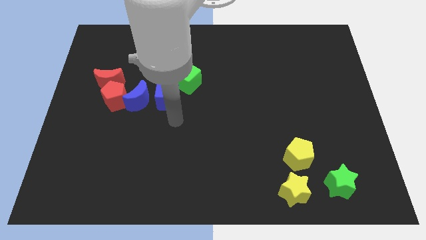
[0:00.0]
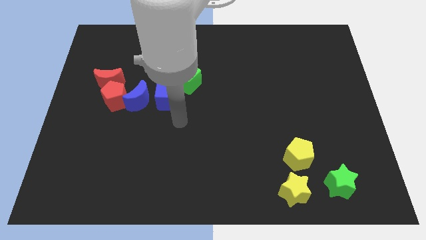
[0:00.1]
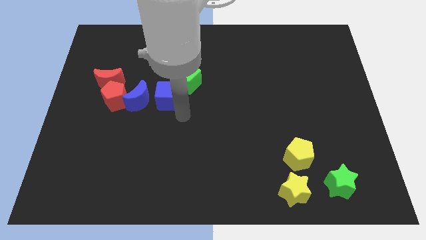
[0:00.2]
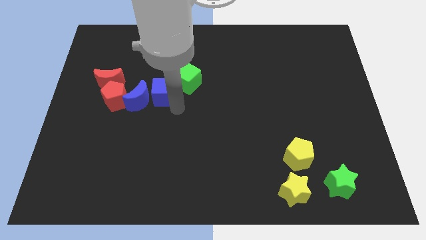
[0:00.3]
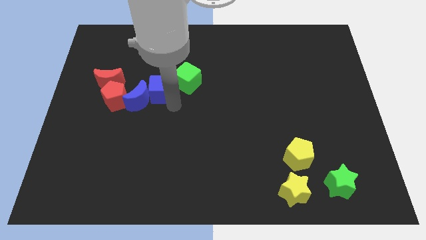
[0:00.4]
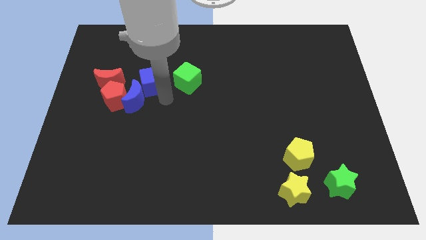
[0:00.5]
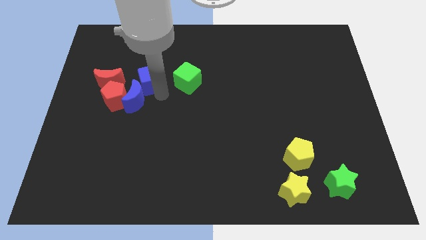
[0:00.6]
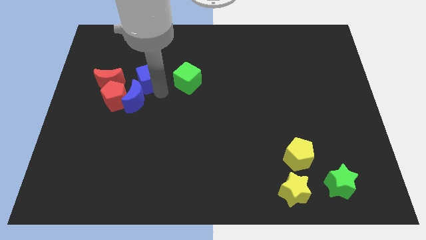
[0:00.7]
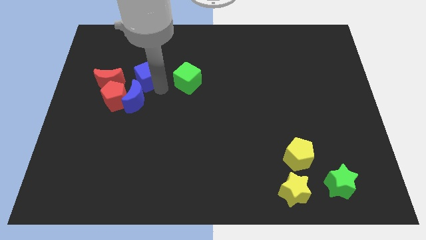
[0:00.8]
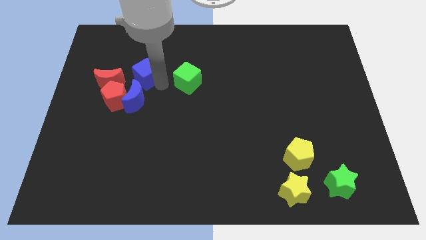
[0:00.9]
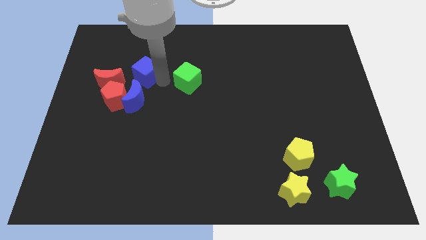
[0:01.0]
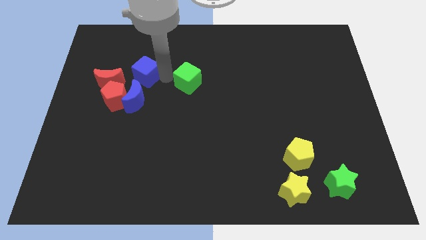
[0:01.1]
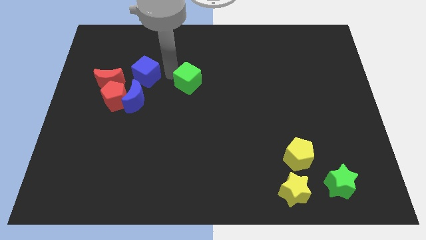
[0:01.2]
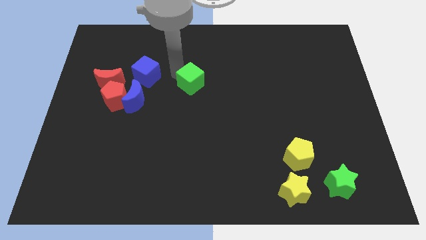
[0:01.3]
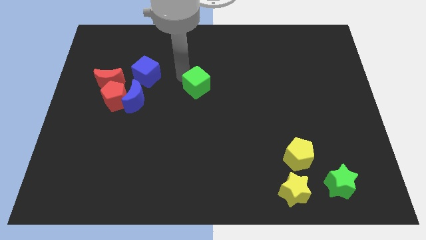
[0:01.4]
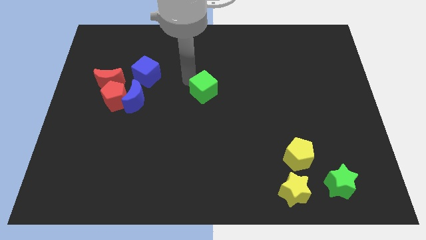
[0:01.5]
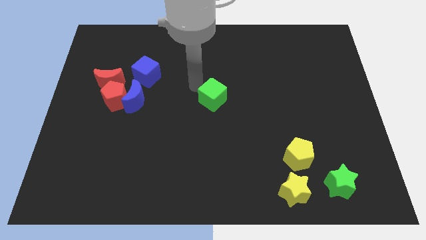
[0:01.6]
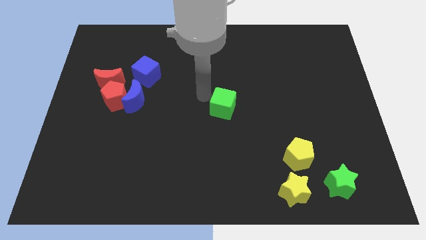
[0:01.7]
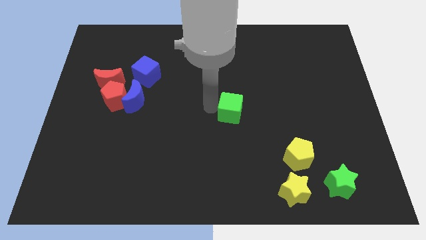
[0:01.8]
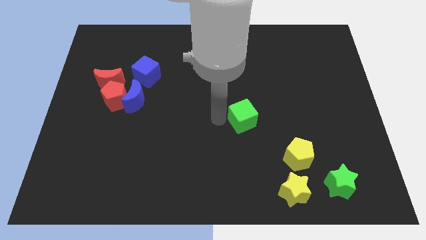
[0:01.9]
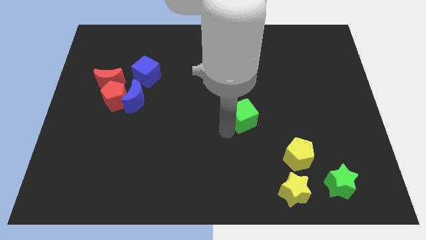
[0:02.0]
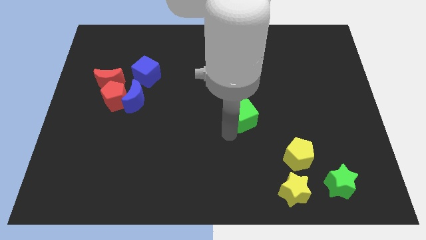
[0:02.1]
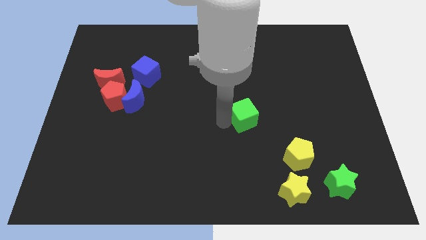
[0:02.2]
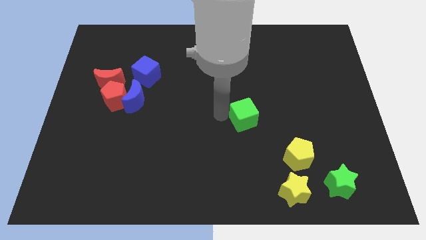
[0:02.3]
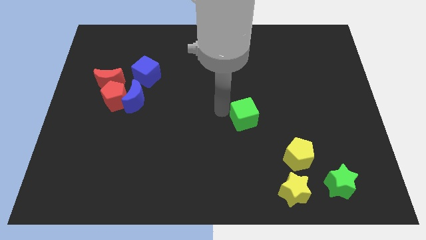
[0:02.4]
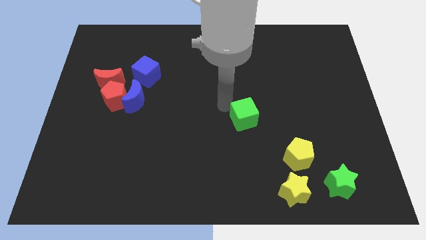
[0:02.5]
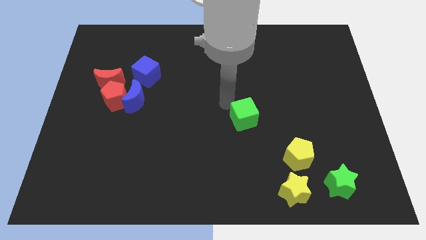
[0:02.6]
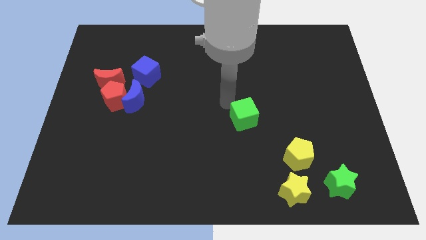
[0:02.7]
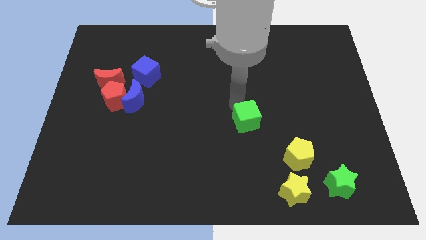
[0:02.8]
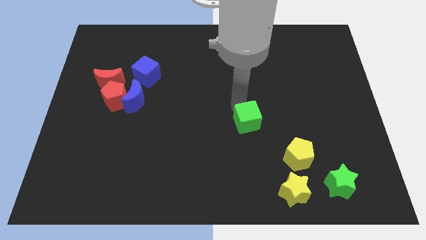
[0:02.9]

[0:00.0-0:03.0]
separate the green cube from the group of blocks

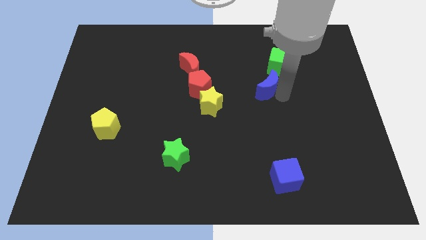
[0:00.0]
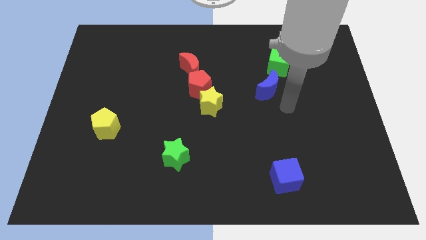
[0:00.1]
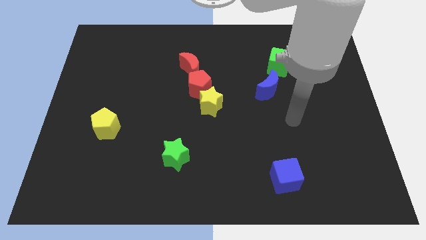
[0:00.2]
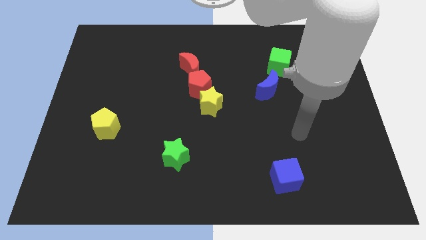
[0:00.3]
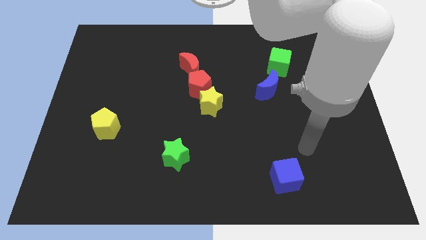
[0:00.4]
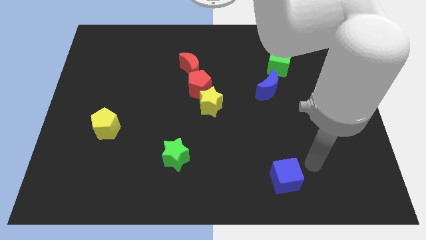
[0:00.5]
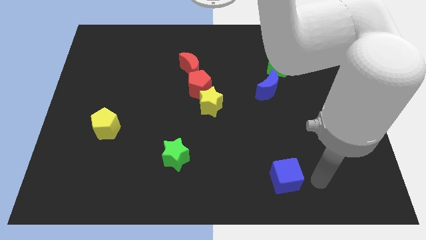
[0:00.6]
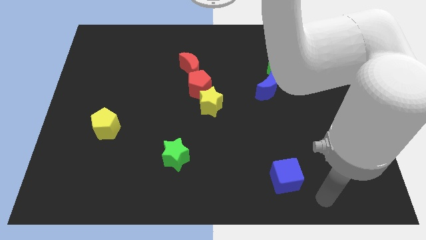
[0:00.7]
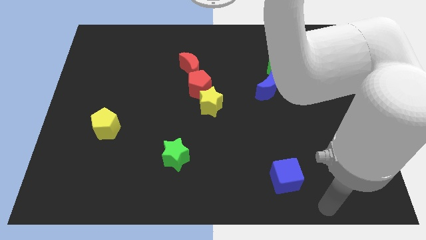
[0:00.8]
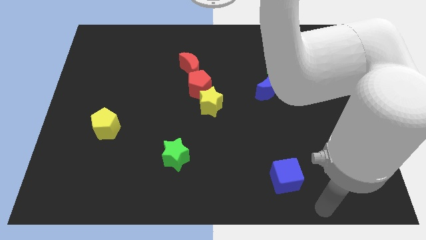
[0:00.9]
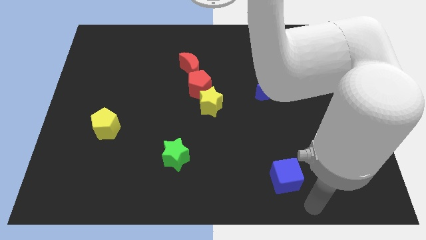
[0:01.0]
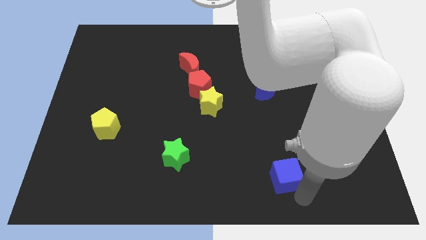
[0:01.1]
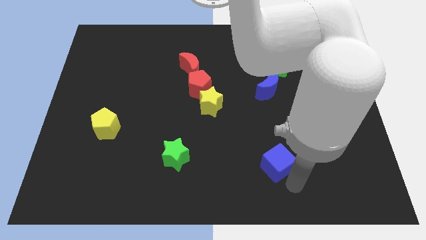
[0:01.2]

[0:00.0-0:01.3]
move your arm to the bottom of blue cube

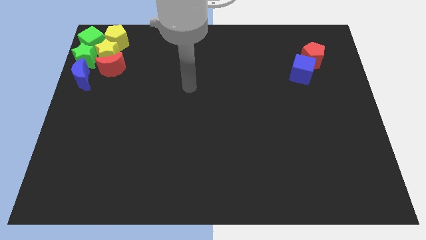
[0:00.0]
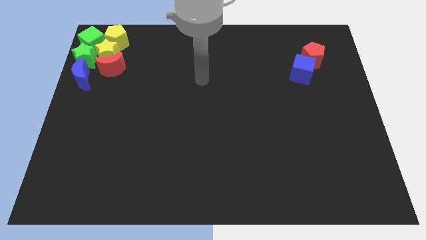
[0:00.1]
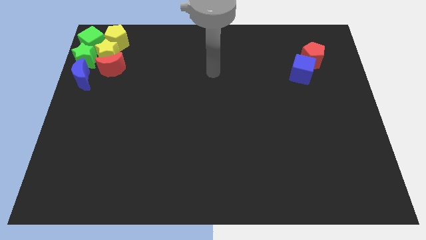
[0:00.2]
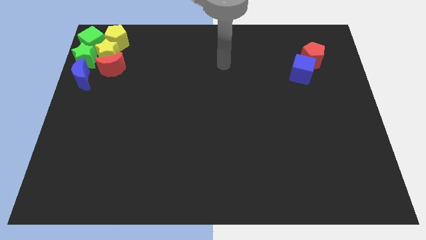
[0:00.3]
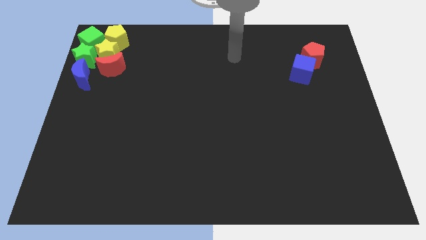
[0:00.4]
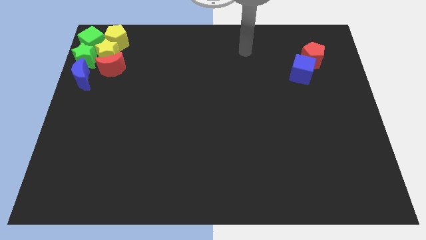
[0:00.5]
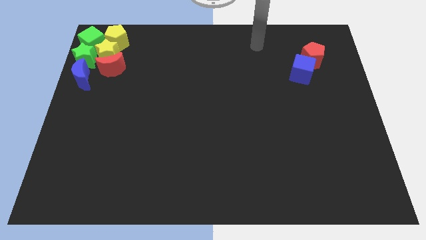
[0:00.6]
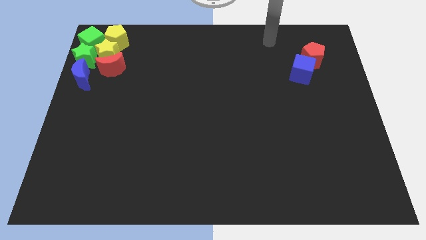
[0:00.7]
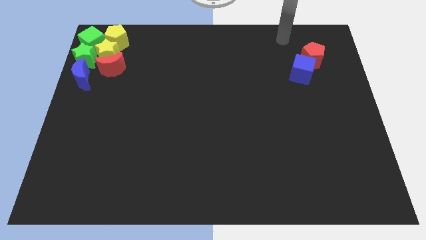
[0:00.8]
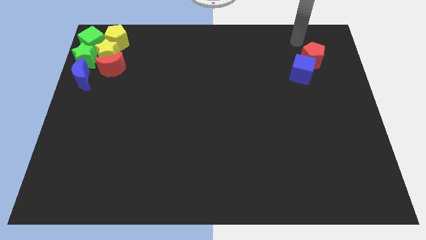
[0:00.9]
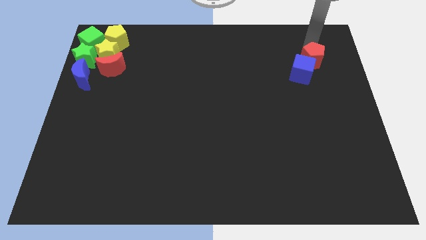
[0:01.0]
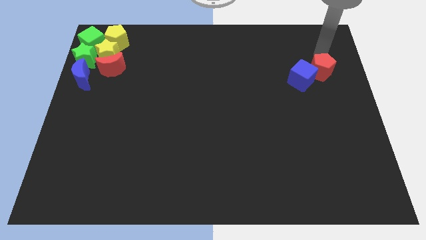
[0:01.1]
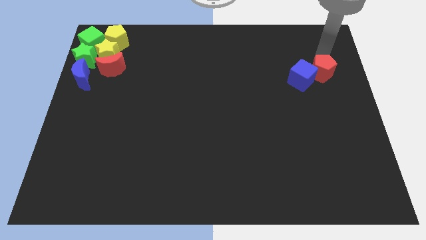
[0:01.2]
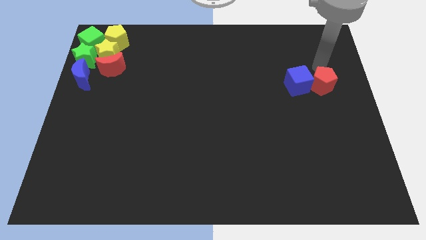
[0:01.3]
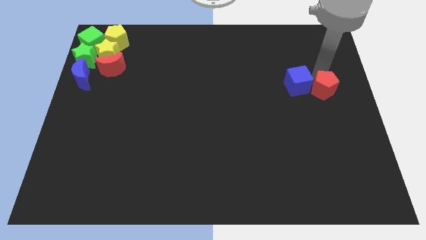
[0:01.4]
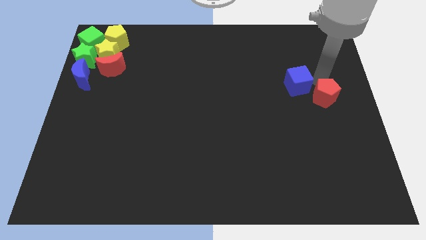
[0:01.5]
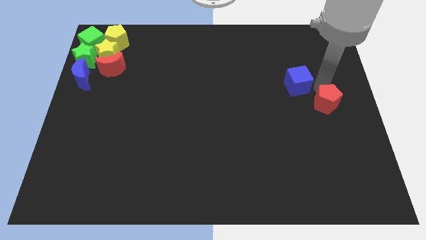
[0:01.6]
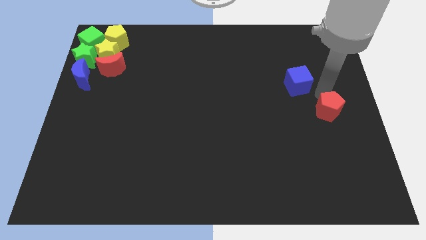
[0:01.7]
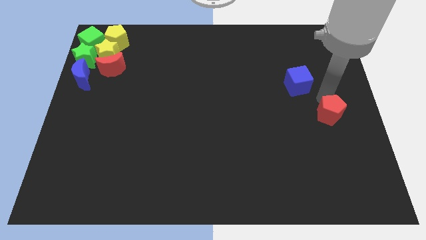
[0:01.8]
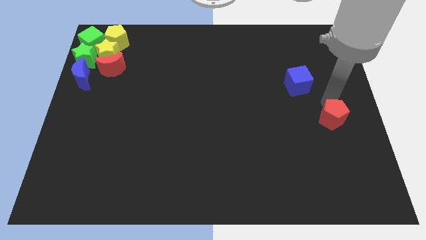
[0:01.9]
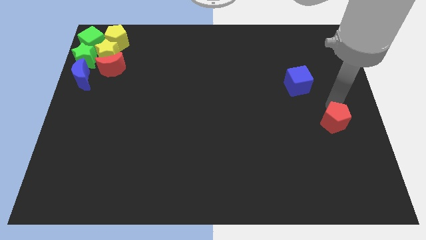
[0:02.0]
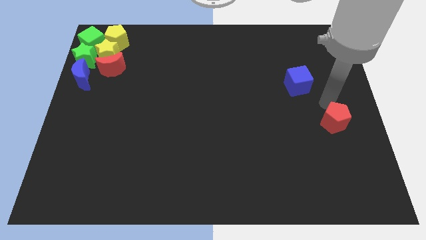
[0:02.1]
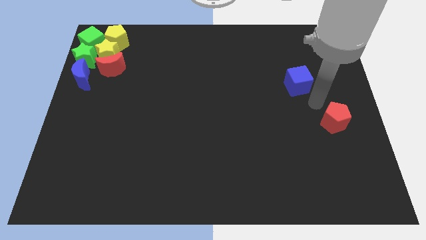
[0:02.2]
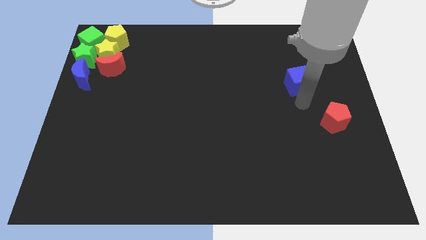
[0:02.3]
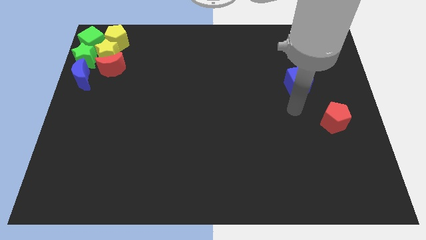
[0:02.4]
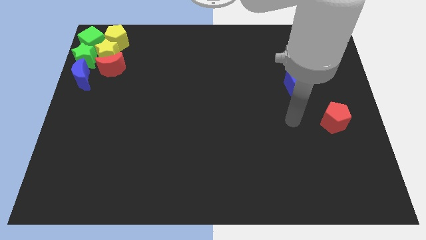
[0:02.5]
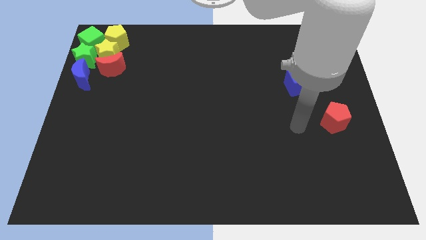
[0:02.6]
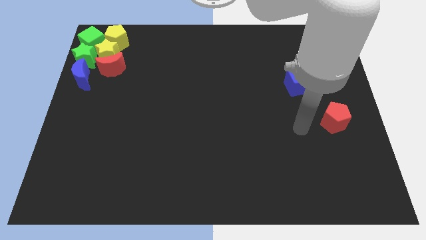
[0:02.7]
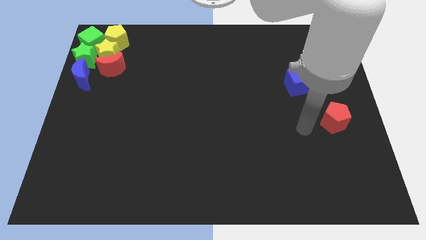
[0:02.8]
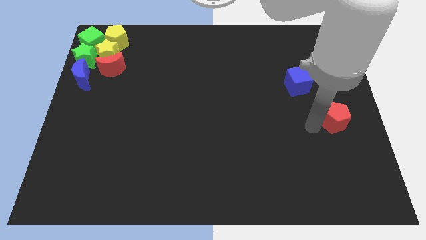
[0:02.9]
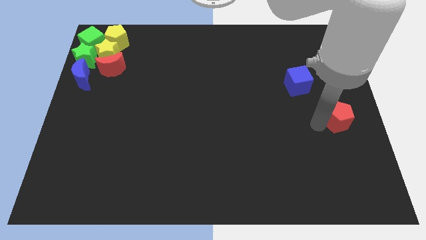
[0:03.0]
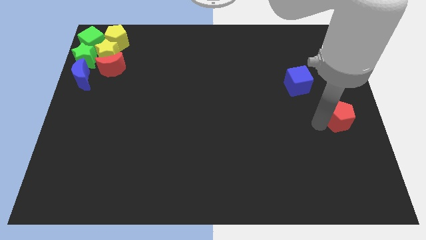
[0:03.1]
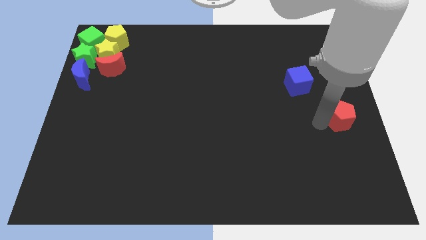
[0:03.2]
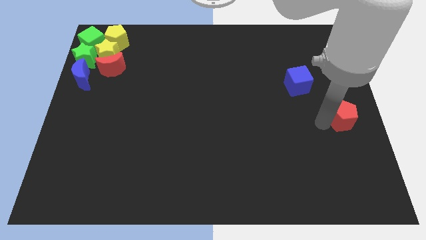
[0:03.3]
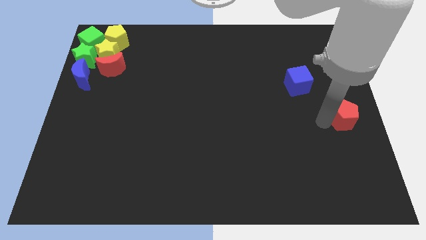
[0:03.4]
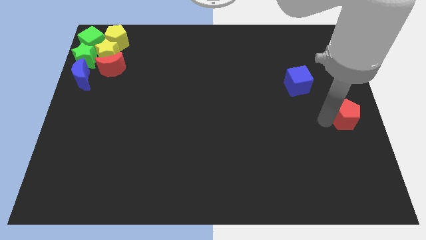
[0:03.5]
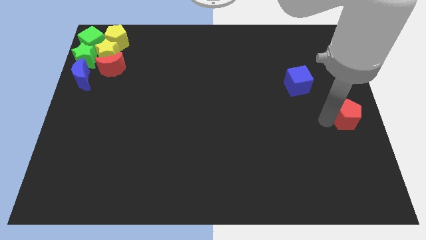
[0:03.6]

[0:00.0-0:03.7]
move the red pentagon towards the right center of the board

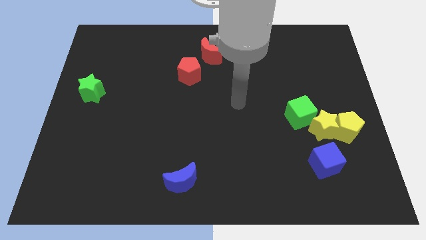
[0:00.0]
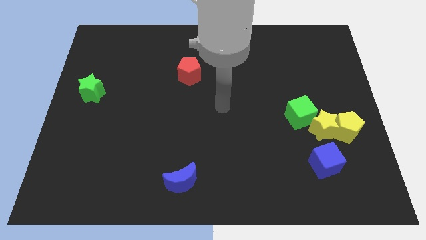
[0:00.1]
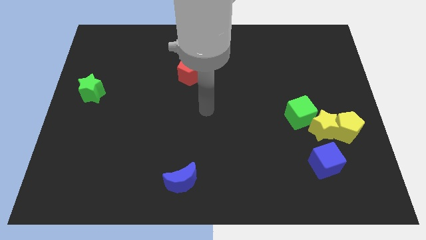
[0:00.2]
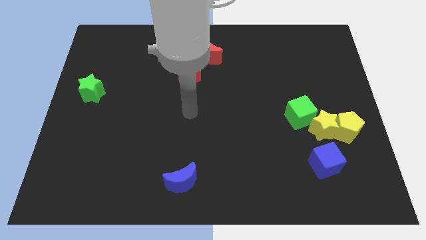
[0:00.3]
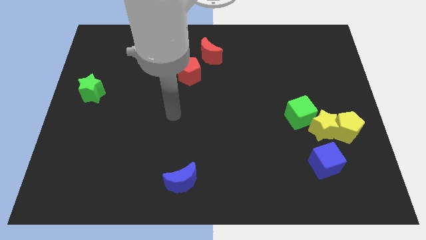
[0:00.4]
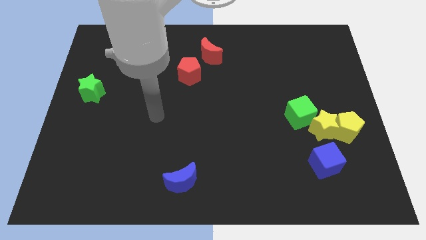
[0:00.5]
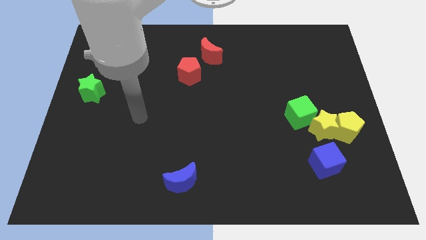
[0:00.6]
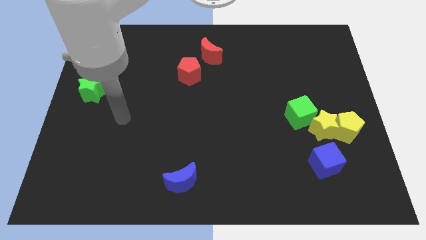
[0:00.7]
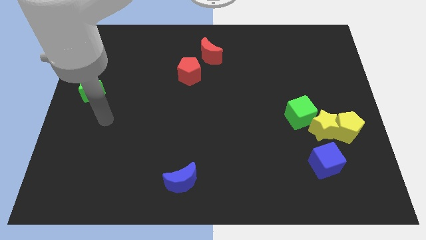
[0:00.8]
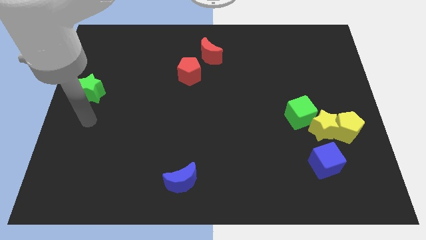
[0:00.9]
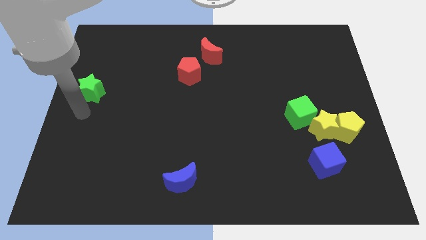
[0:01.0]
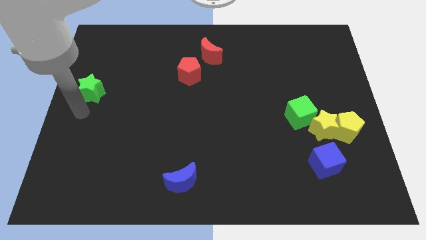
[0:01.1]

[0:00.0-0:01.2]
place your arm to the bottom of green star
